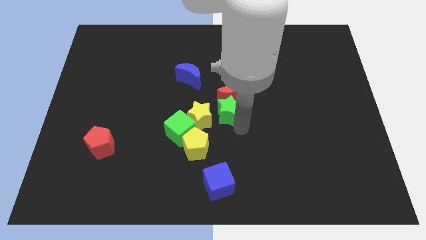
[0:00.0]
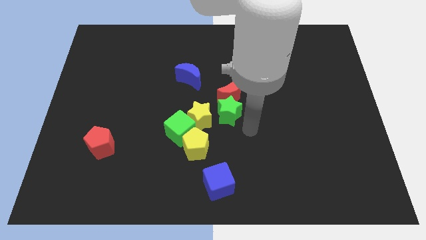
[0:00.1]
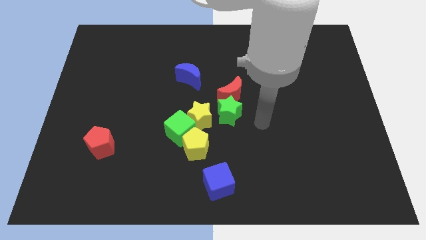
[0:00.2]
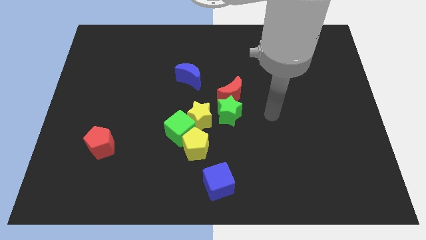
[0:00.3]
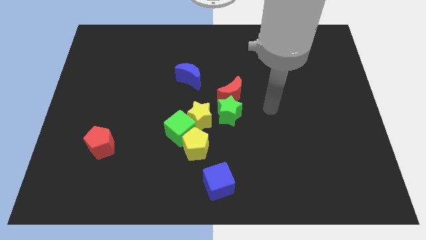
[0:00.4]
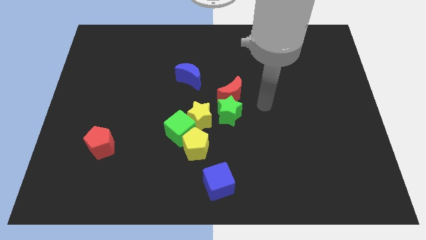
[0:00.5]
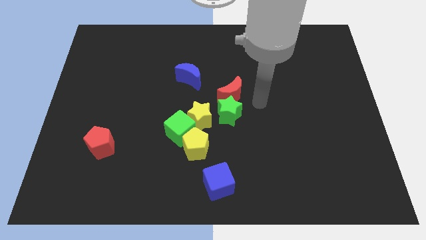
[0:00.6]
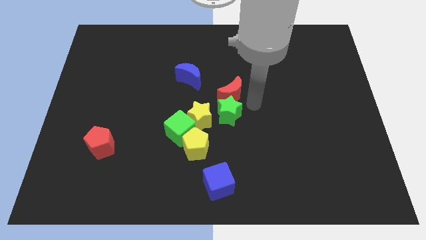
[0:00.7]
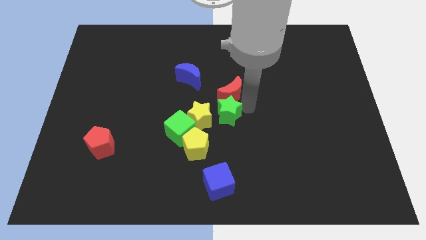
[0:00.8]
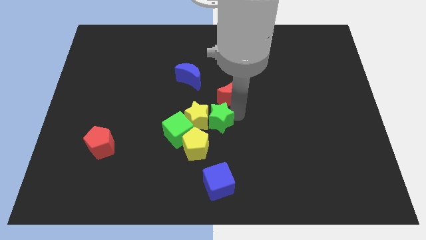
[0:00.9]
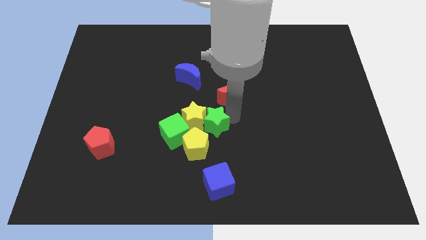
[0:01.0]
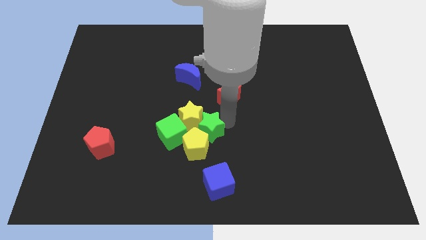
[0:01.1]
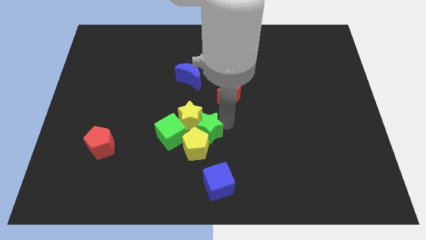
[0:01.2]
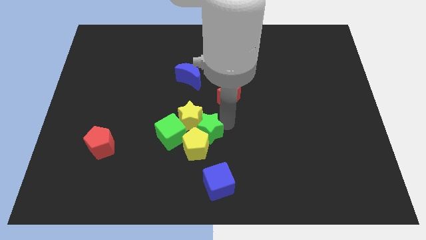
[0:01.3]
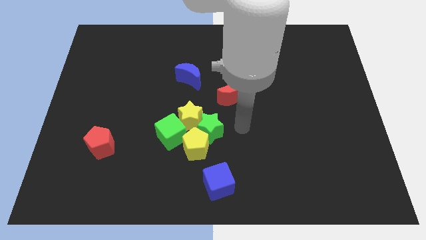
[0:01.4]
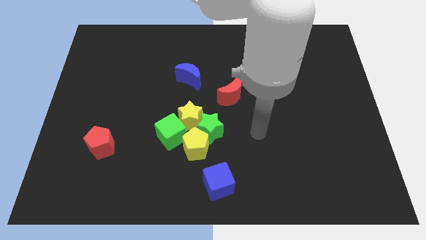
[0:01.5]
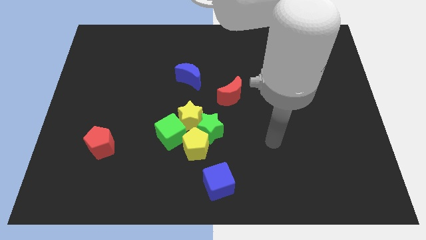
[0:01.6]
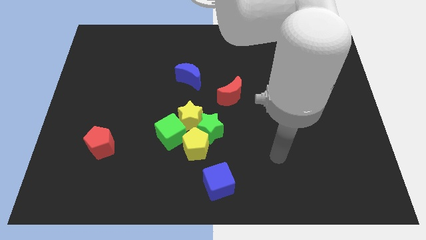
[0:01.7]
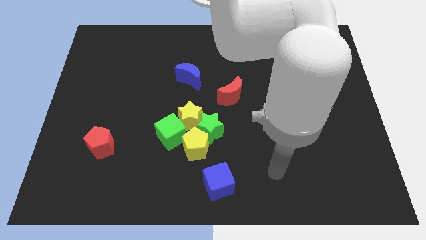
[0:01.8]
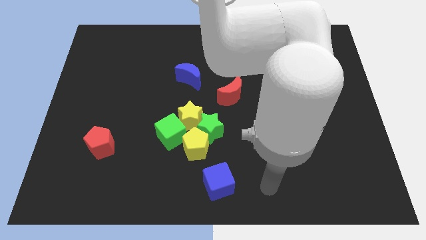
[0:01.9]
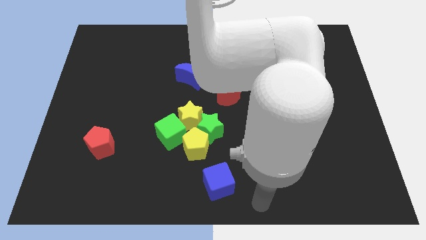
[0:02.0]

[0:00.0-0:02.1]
move green star to the top right of yellow pentagon

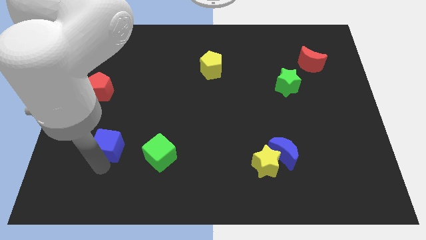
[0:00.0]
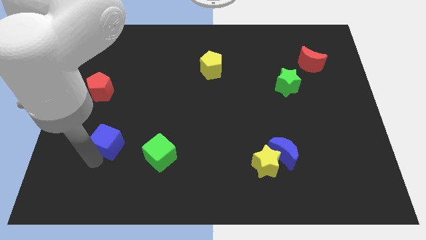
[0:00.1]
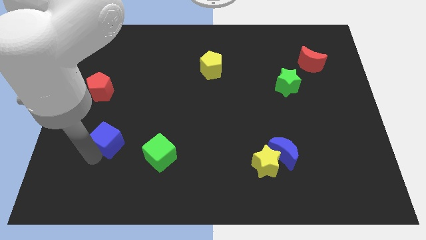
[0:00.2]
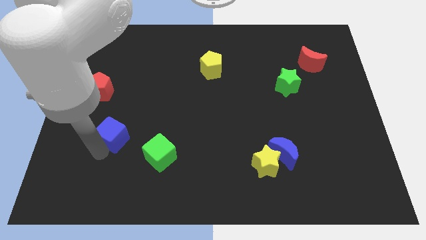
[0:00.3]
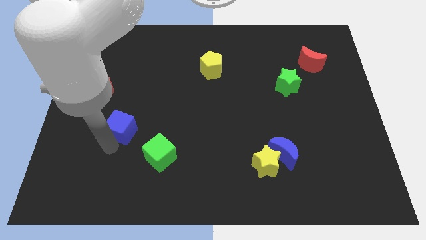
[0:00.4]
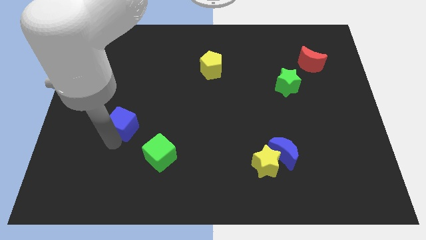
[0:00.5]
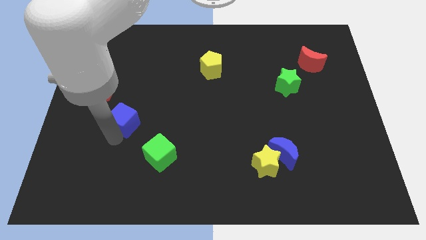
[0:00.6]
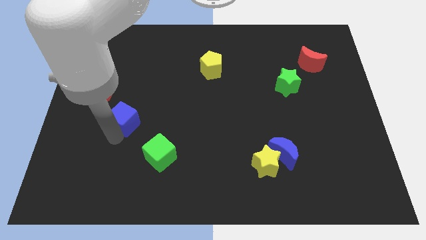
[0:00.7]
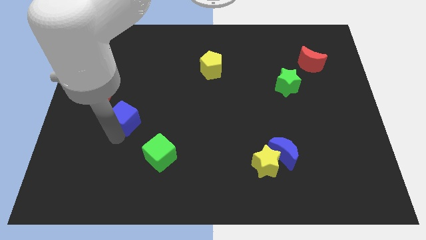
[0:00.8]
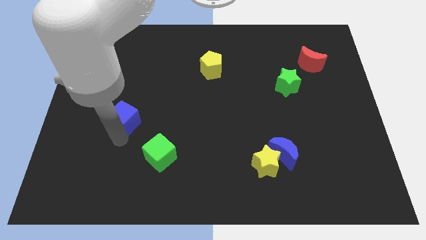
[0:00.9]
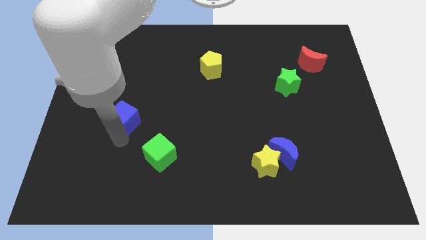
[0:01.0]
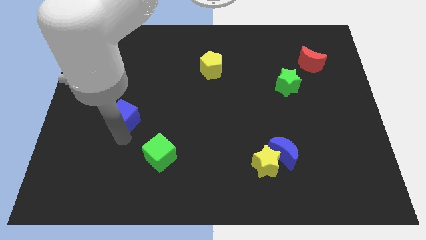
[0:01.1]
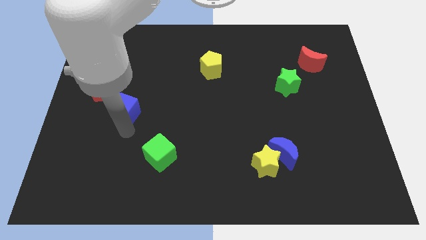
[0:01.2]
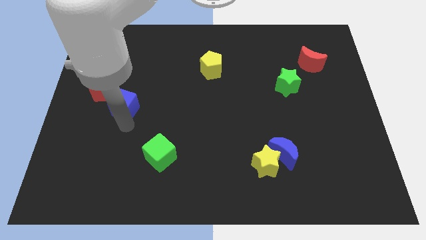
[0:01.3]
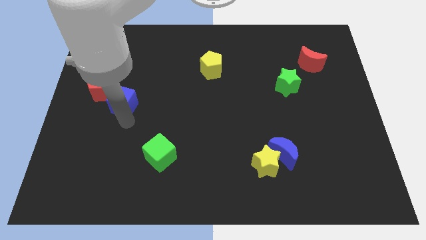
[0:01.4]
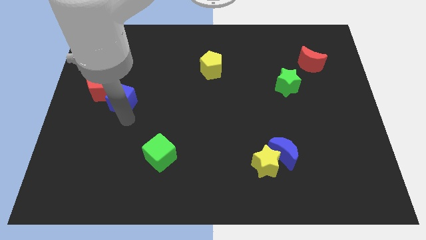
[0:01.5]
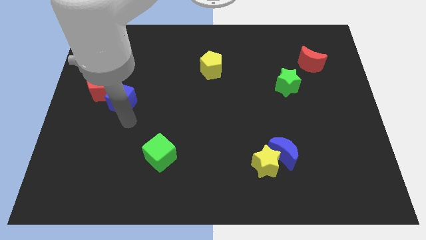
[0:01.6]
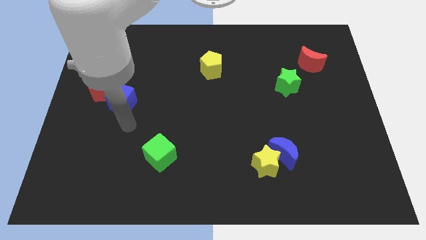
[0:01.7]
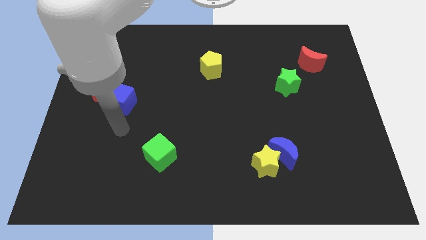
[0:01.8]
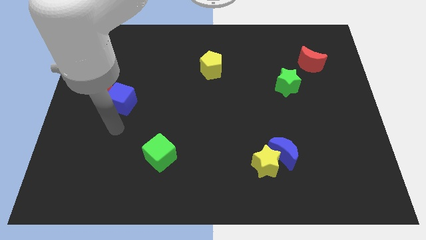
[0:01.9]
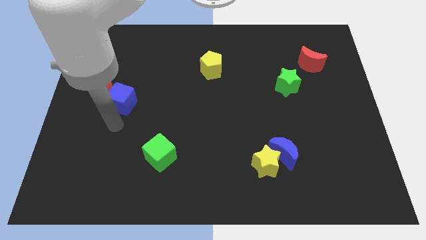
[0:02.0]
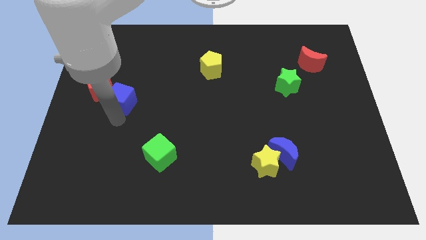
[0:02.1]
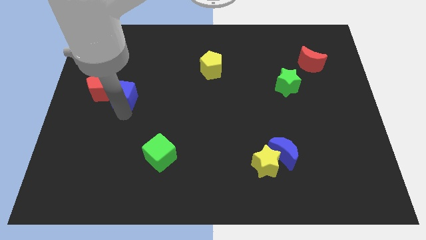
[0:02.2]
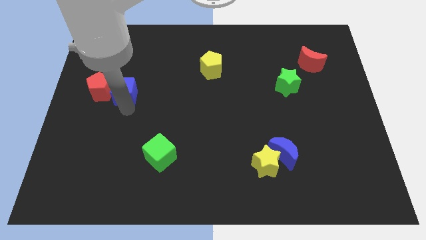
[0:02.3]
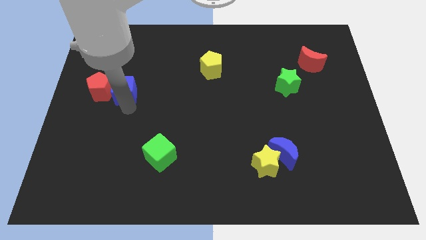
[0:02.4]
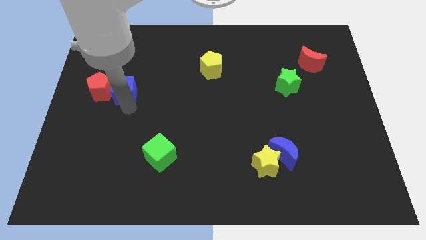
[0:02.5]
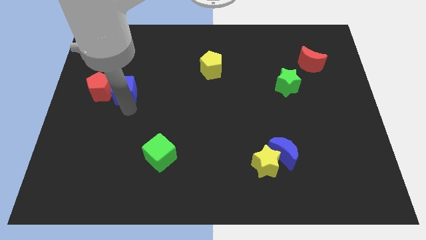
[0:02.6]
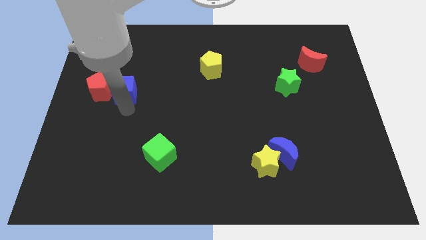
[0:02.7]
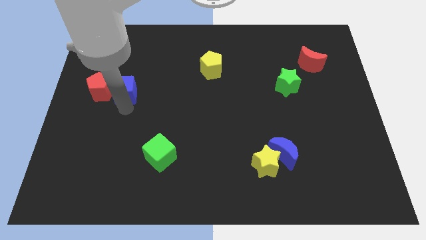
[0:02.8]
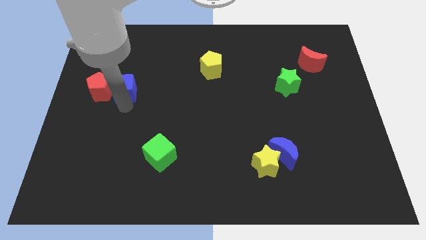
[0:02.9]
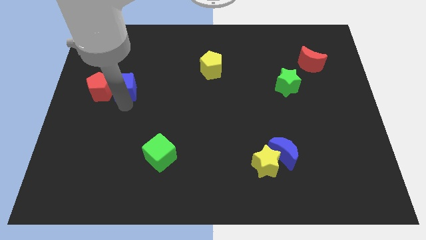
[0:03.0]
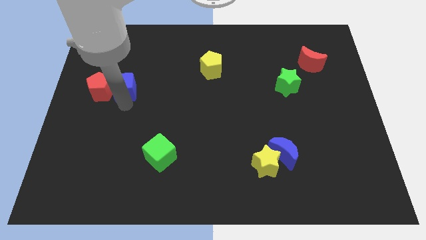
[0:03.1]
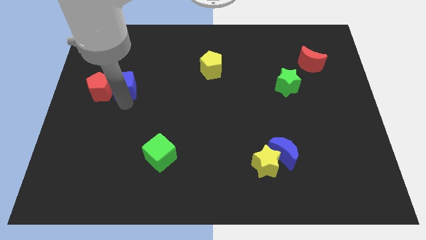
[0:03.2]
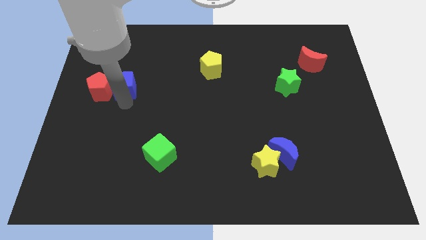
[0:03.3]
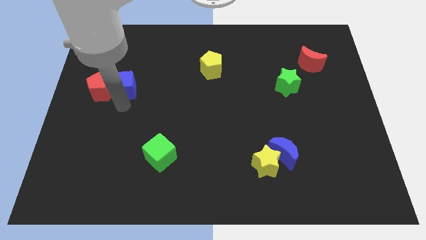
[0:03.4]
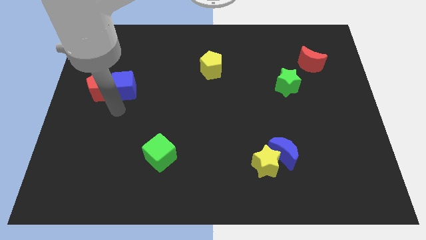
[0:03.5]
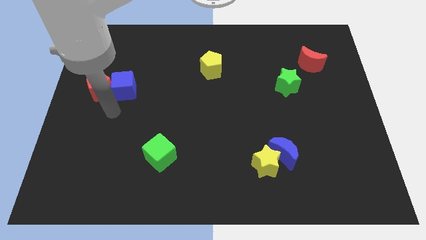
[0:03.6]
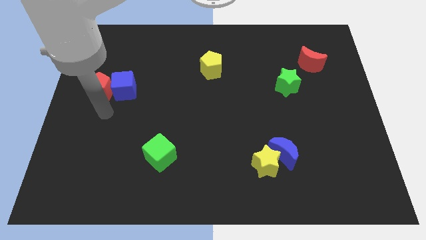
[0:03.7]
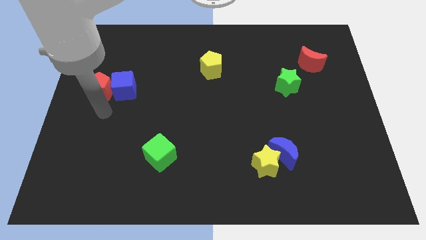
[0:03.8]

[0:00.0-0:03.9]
move blue cube next to red pentagon

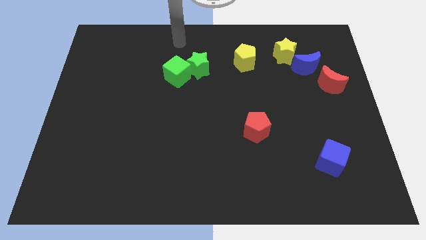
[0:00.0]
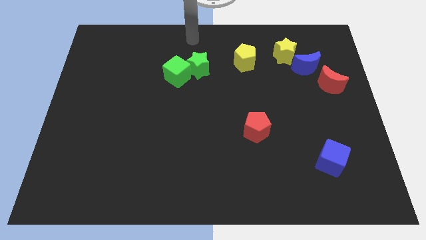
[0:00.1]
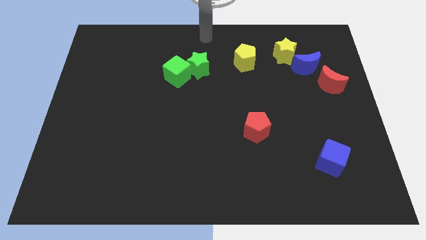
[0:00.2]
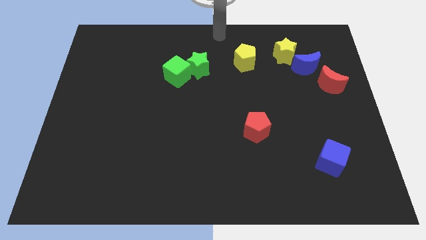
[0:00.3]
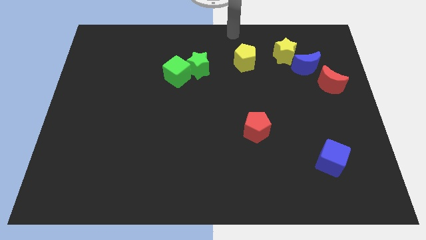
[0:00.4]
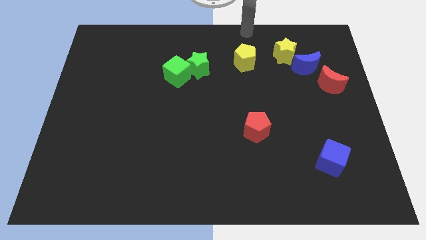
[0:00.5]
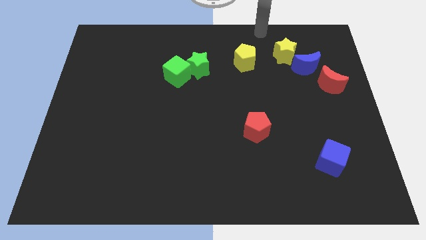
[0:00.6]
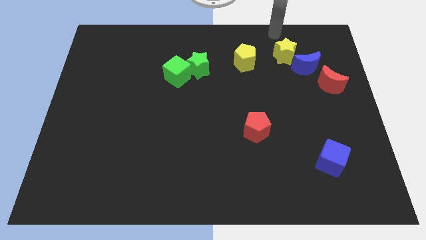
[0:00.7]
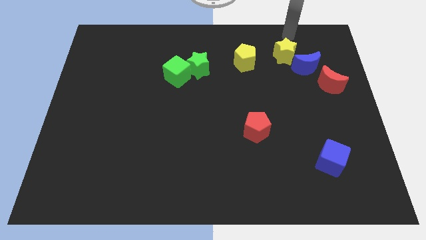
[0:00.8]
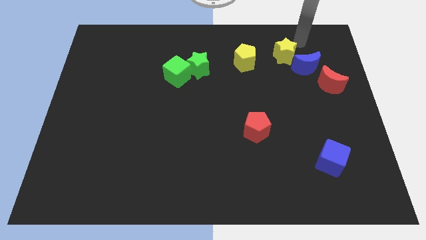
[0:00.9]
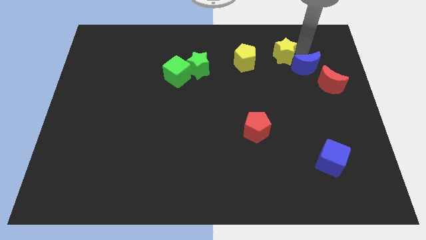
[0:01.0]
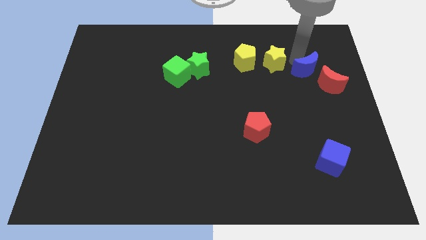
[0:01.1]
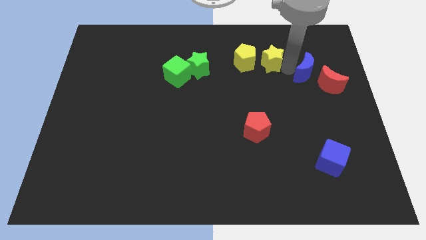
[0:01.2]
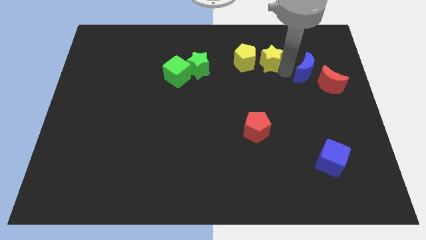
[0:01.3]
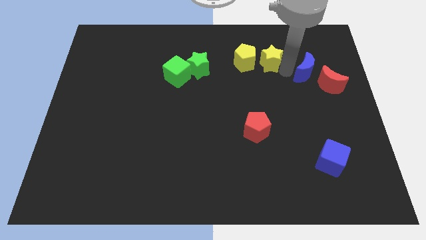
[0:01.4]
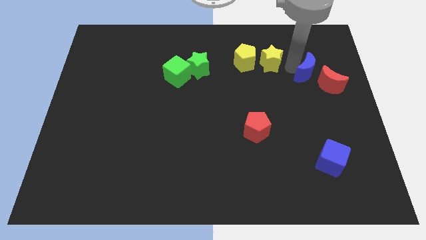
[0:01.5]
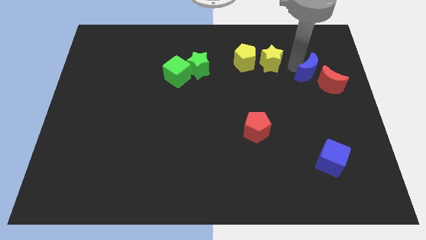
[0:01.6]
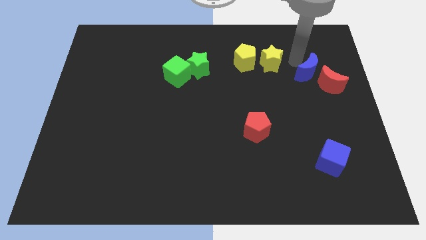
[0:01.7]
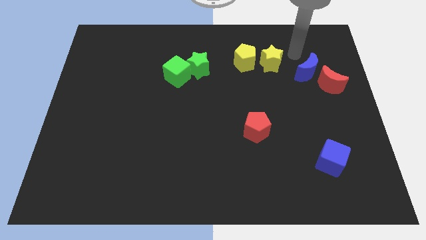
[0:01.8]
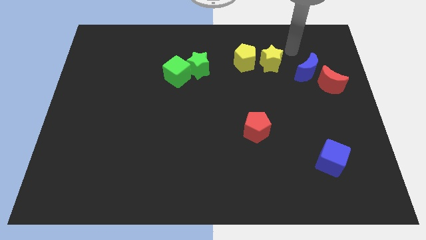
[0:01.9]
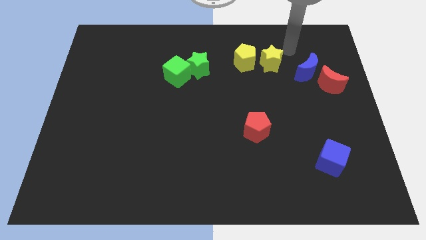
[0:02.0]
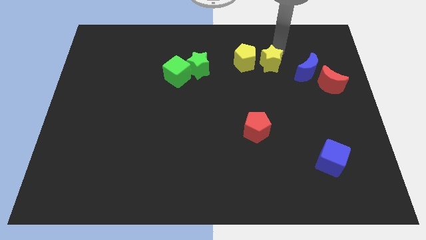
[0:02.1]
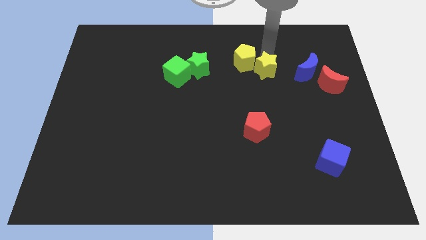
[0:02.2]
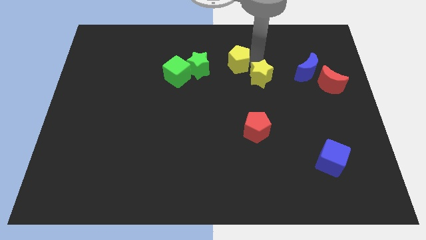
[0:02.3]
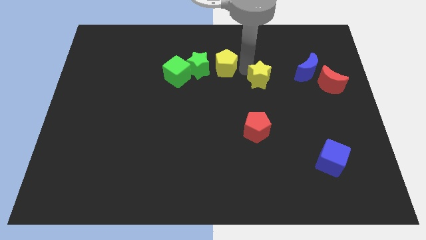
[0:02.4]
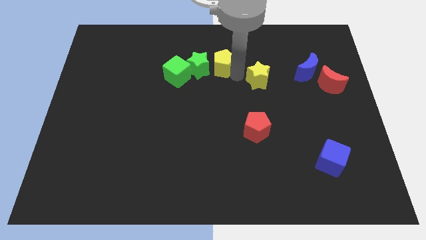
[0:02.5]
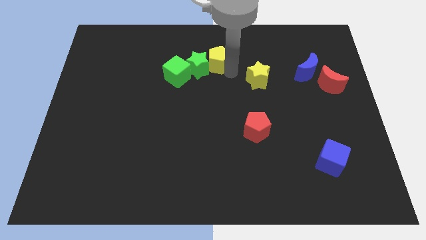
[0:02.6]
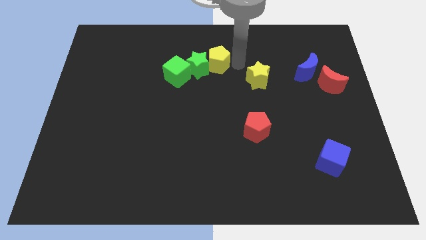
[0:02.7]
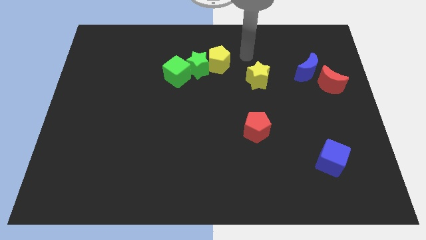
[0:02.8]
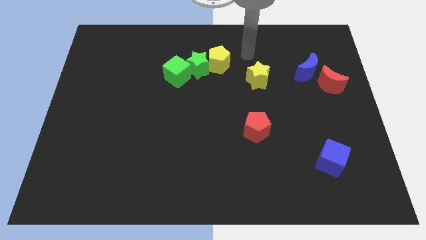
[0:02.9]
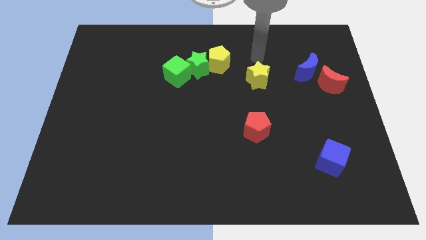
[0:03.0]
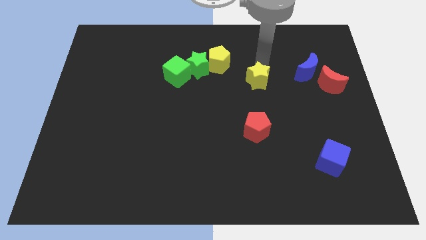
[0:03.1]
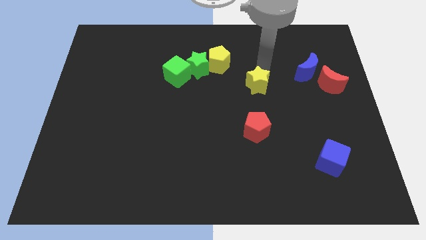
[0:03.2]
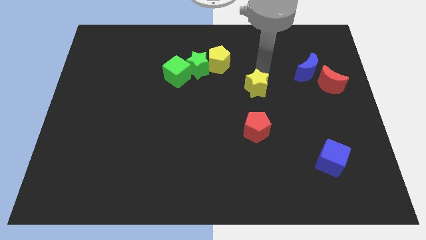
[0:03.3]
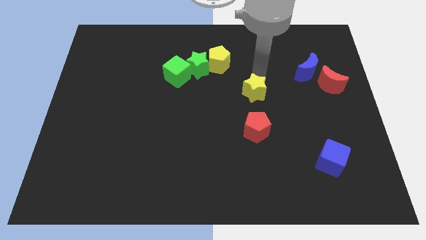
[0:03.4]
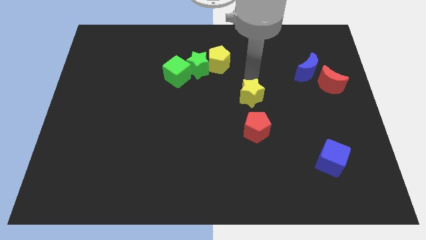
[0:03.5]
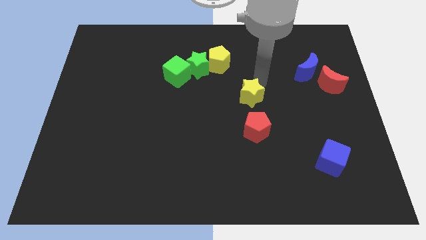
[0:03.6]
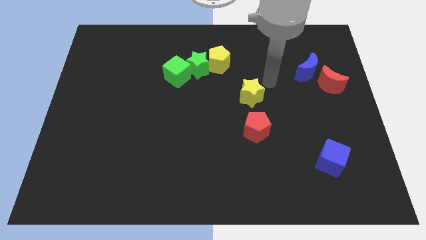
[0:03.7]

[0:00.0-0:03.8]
place the yellow star above the red pentagon
